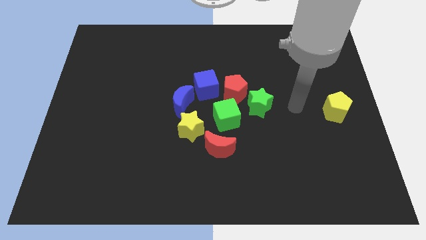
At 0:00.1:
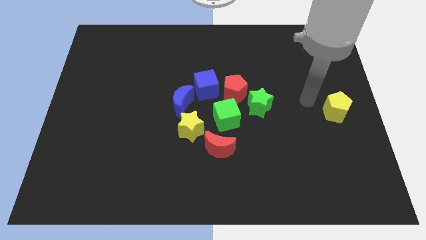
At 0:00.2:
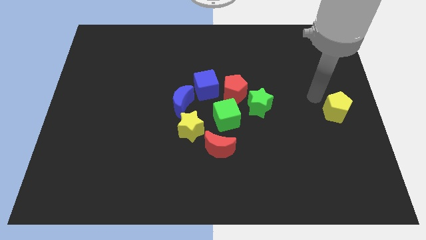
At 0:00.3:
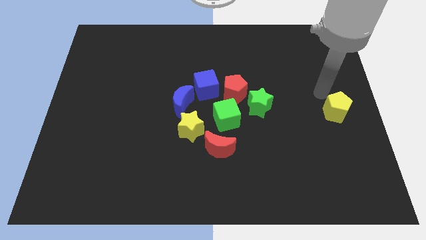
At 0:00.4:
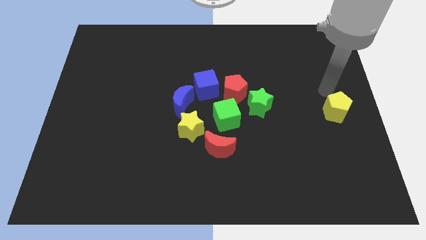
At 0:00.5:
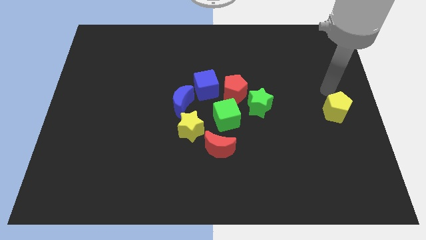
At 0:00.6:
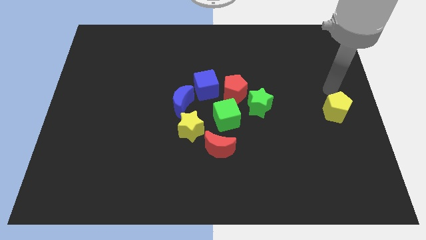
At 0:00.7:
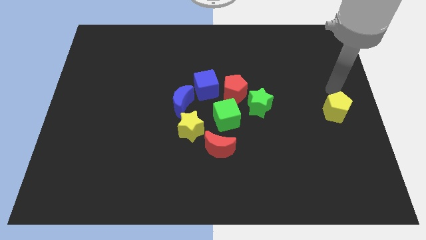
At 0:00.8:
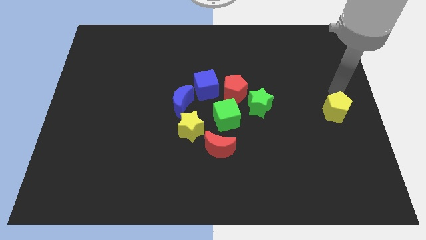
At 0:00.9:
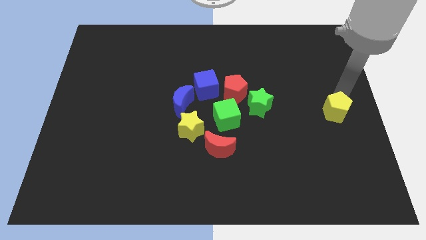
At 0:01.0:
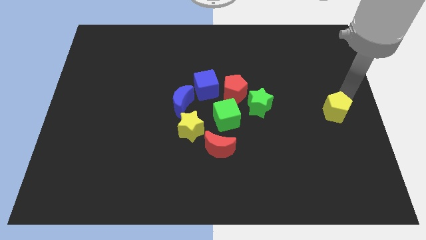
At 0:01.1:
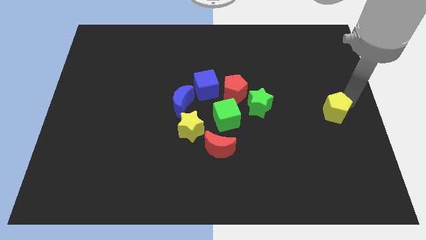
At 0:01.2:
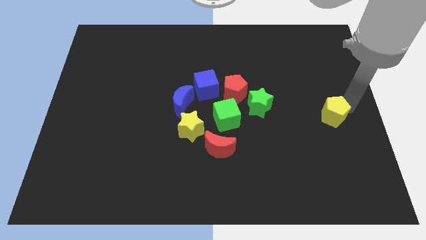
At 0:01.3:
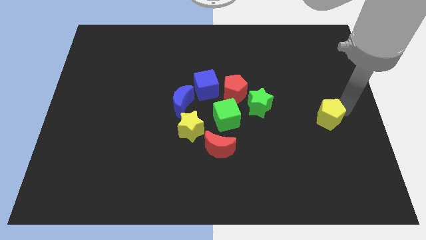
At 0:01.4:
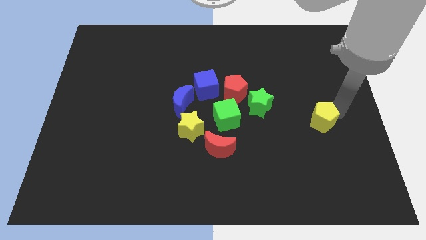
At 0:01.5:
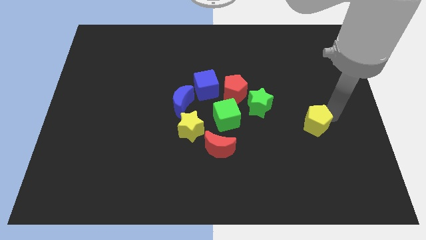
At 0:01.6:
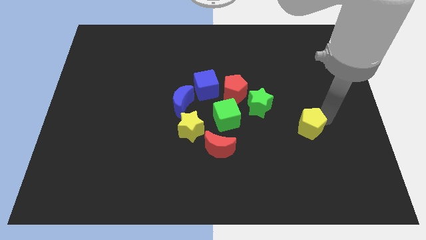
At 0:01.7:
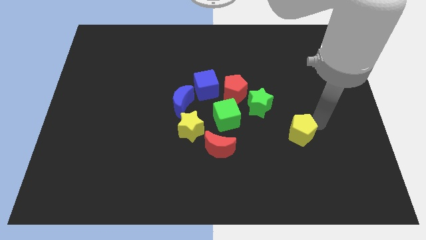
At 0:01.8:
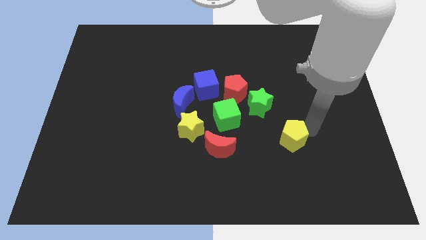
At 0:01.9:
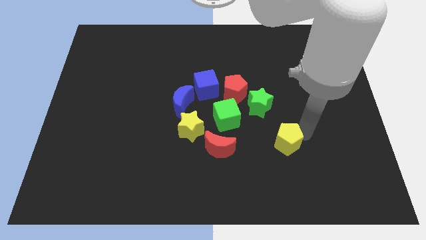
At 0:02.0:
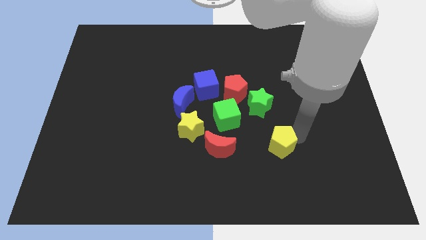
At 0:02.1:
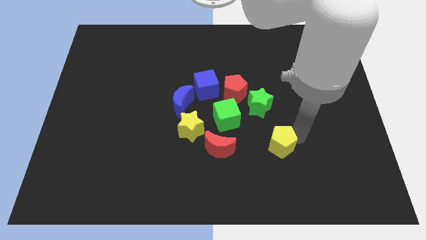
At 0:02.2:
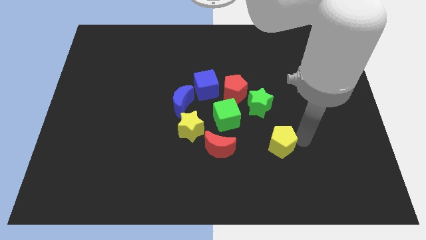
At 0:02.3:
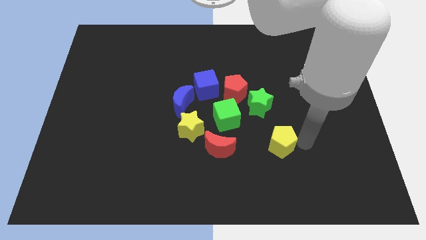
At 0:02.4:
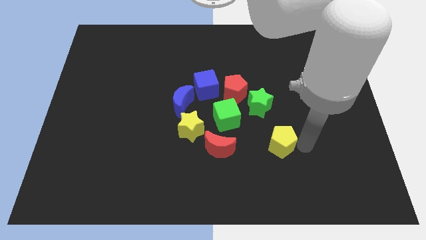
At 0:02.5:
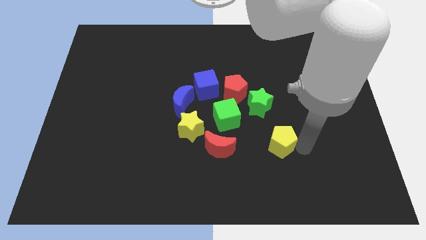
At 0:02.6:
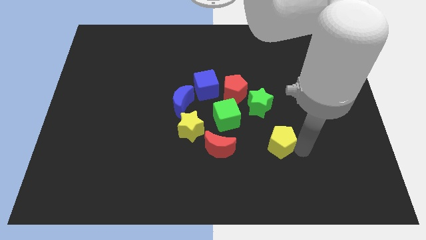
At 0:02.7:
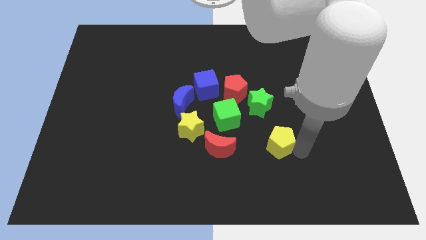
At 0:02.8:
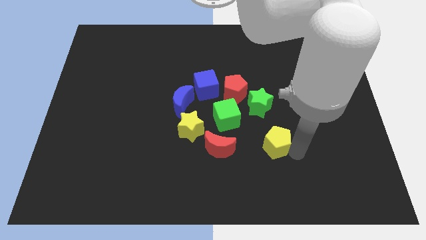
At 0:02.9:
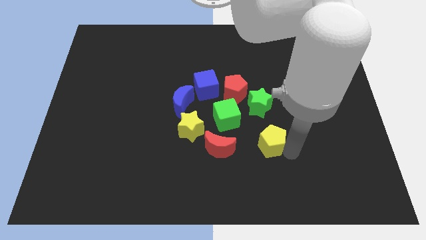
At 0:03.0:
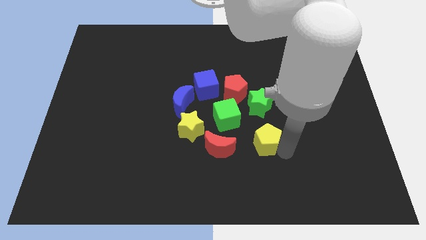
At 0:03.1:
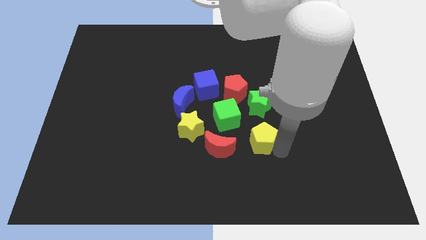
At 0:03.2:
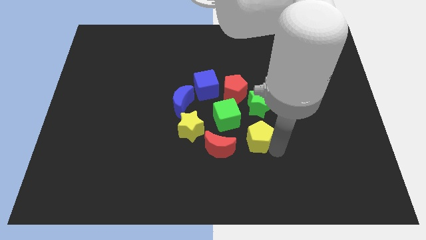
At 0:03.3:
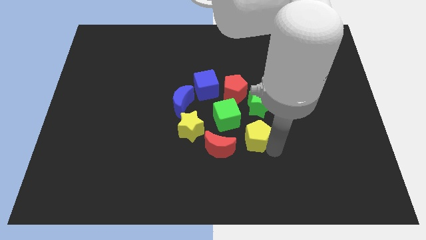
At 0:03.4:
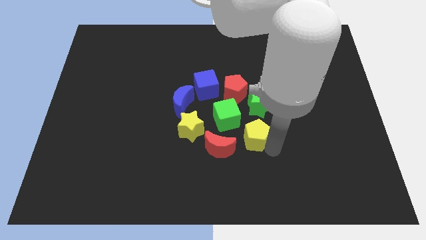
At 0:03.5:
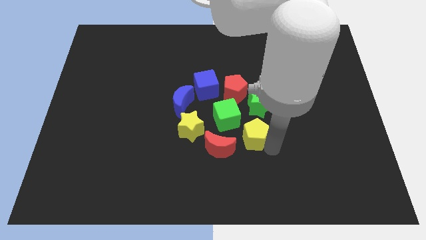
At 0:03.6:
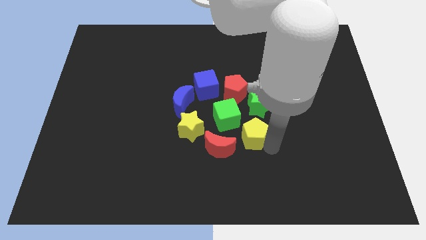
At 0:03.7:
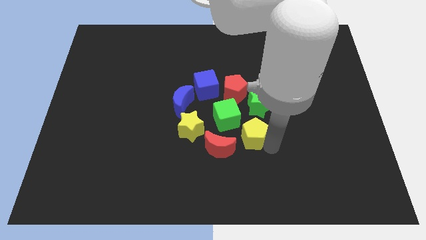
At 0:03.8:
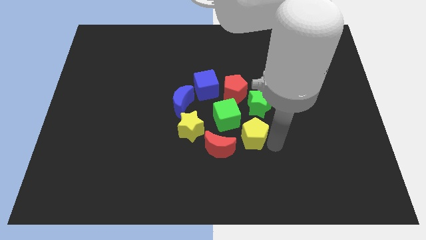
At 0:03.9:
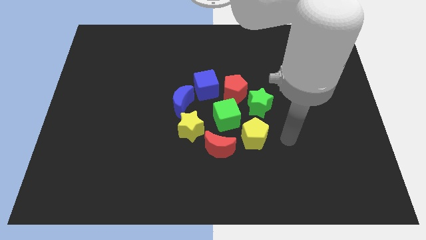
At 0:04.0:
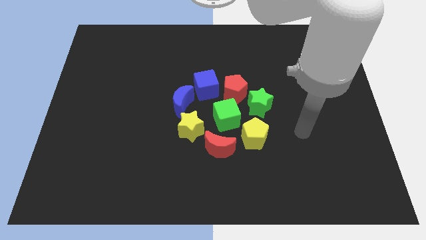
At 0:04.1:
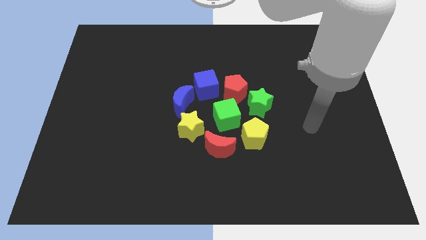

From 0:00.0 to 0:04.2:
place the yellow pentagon near the red crescent

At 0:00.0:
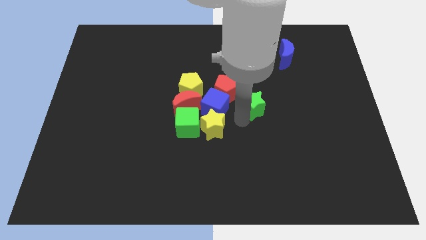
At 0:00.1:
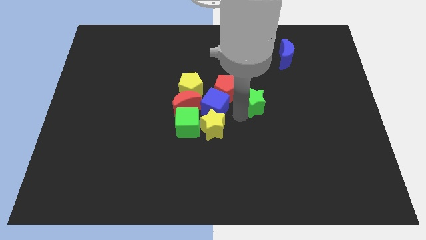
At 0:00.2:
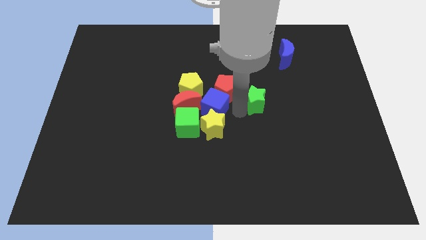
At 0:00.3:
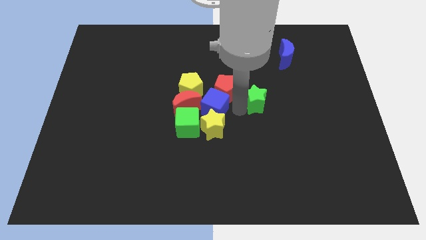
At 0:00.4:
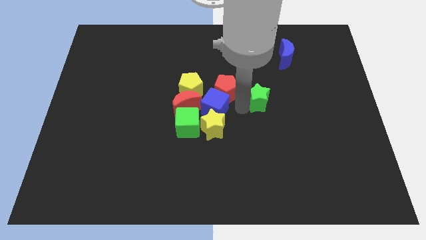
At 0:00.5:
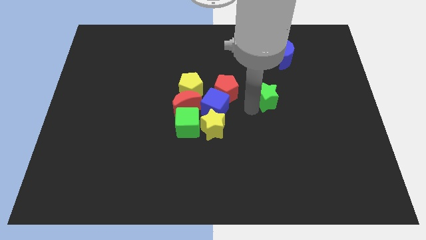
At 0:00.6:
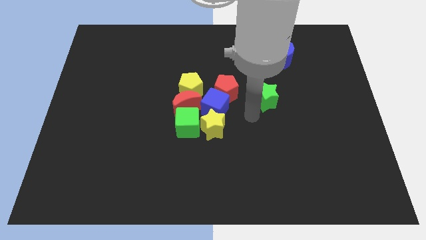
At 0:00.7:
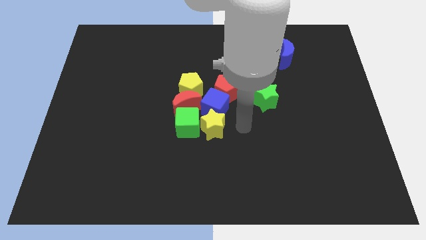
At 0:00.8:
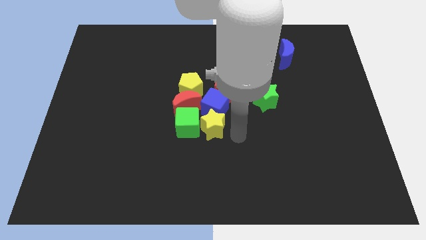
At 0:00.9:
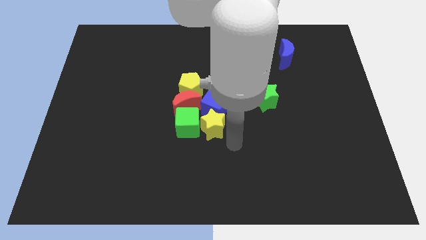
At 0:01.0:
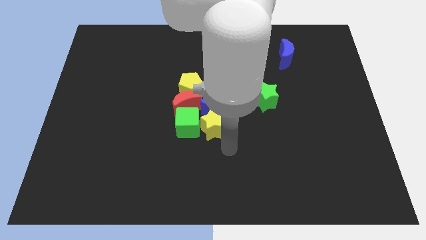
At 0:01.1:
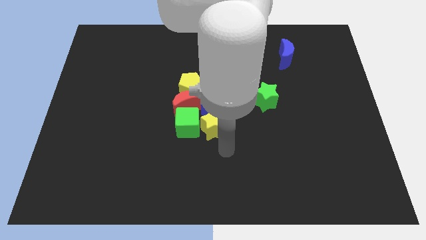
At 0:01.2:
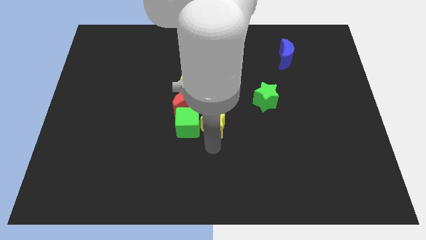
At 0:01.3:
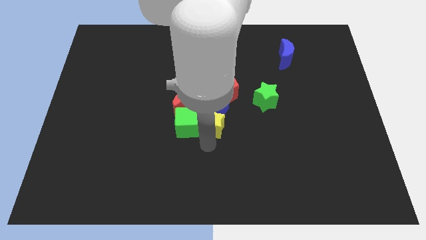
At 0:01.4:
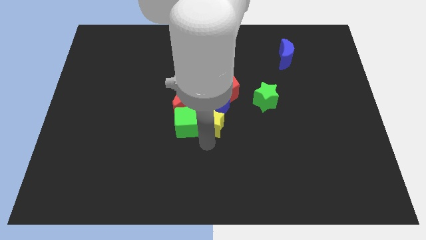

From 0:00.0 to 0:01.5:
place the green star right to the red pentagon

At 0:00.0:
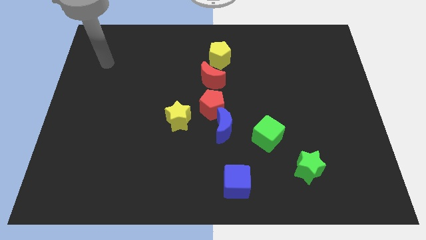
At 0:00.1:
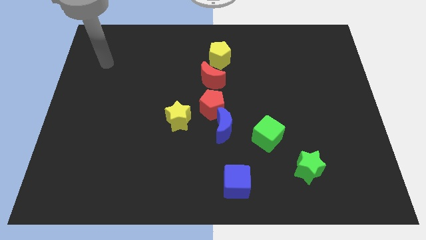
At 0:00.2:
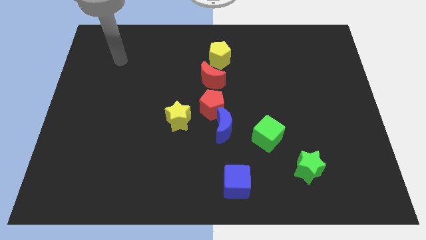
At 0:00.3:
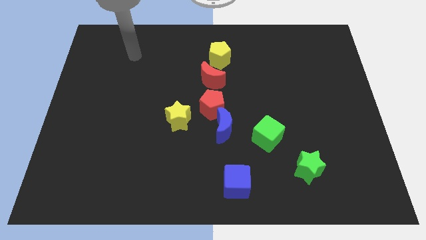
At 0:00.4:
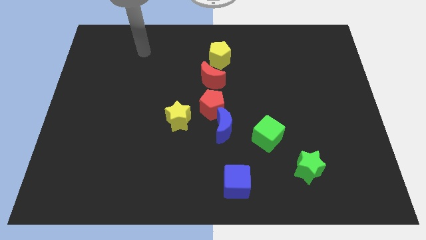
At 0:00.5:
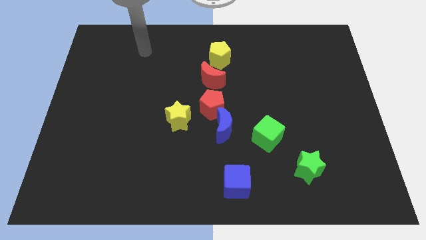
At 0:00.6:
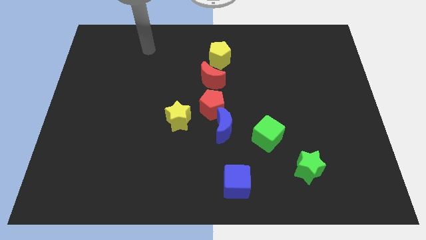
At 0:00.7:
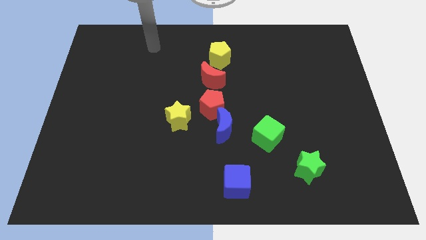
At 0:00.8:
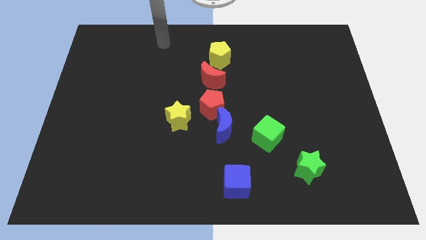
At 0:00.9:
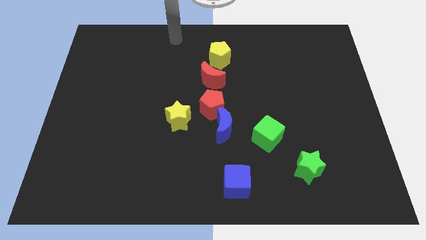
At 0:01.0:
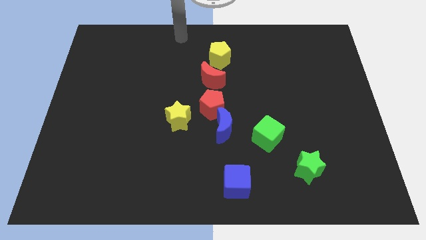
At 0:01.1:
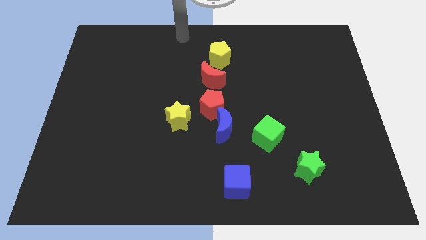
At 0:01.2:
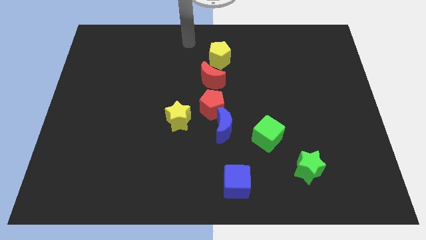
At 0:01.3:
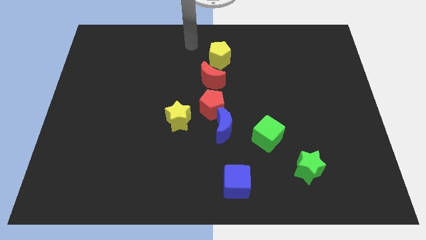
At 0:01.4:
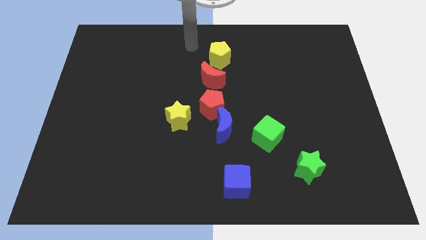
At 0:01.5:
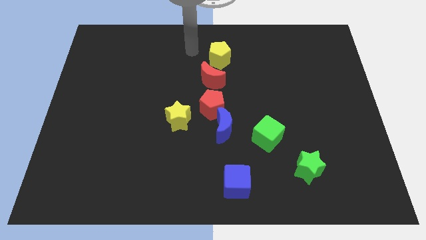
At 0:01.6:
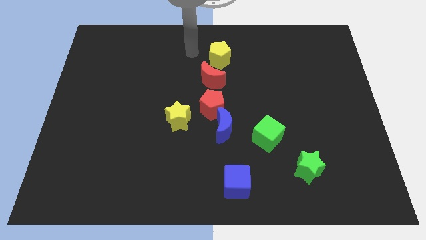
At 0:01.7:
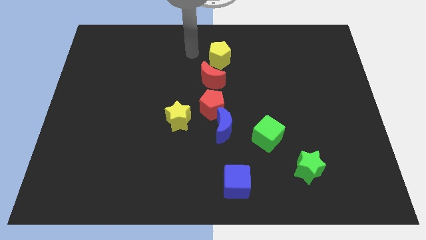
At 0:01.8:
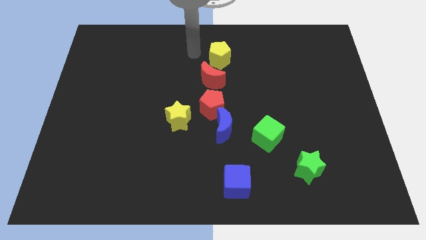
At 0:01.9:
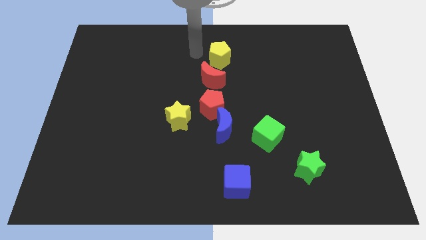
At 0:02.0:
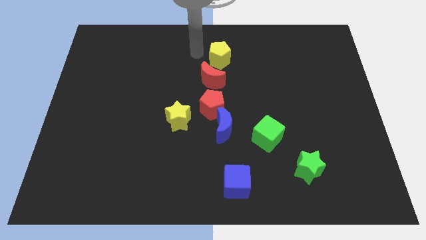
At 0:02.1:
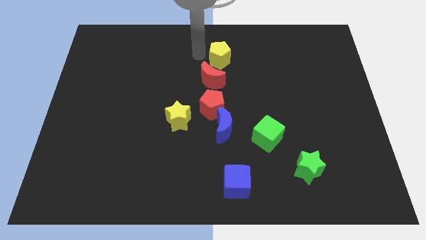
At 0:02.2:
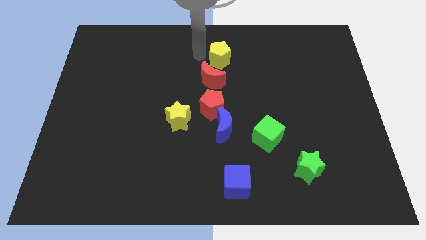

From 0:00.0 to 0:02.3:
move your arm close to the left side of the yellow pentagon

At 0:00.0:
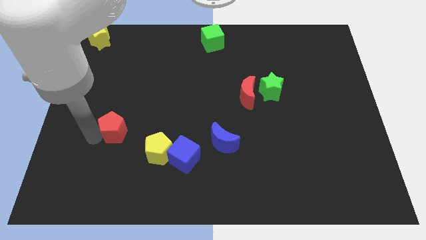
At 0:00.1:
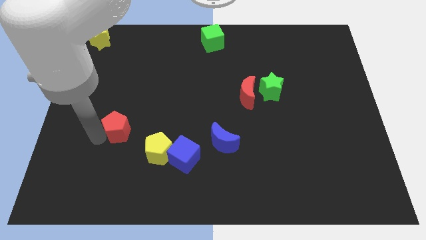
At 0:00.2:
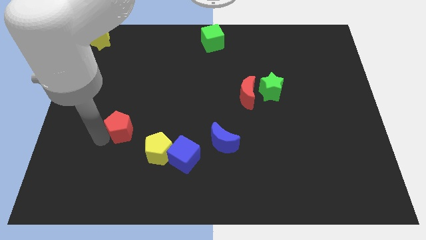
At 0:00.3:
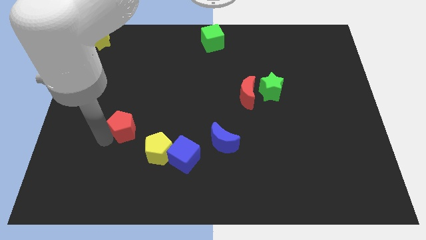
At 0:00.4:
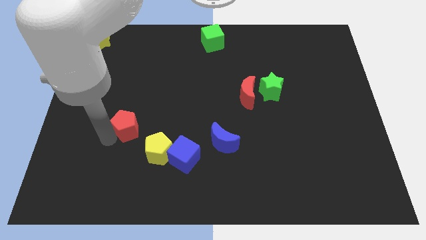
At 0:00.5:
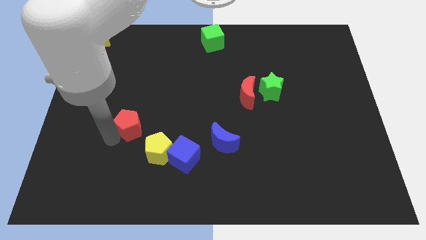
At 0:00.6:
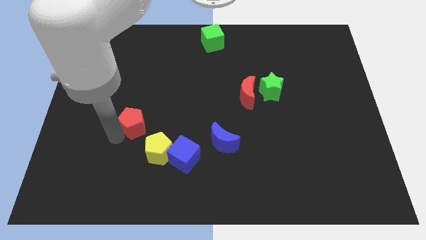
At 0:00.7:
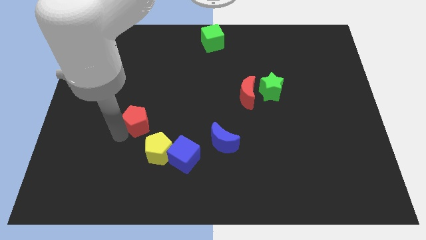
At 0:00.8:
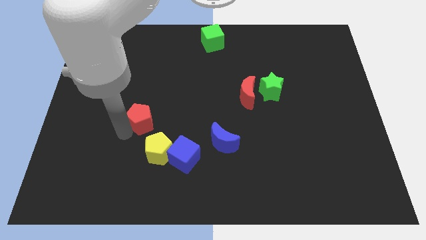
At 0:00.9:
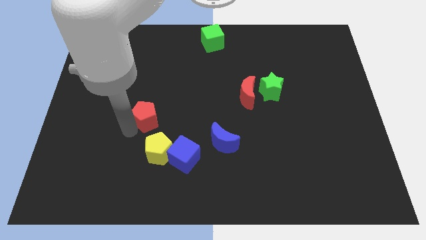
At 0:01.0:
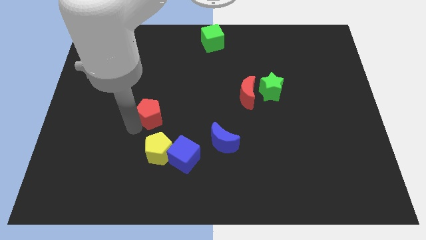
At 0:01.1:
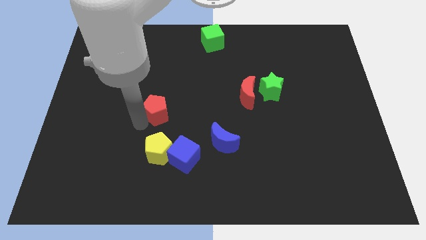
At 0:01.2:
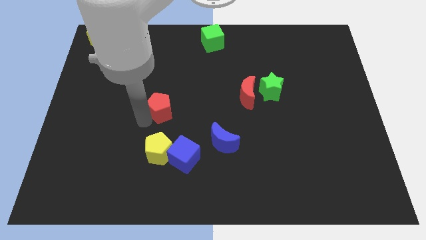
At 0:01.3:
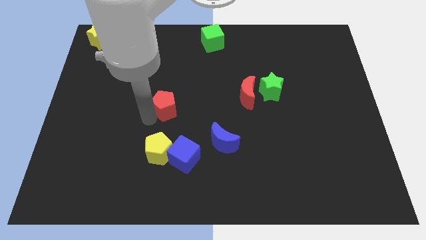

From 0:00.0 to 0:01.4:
place the red pentagon above the yellow pentagon
